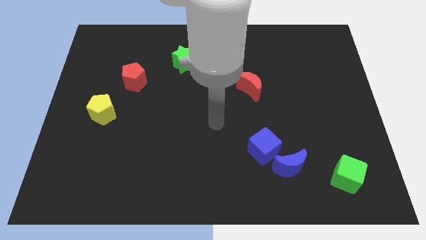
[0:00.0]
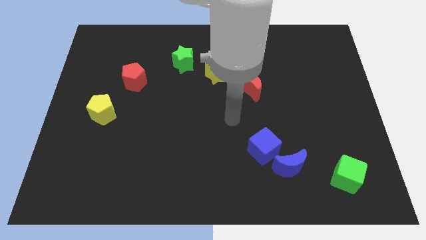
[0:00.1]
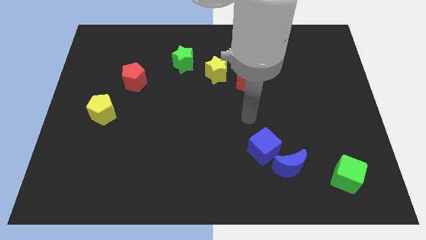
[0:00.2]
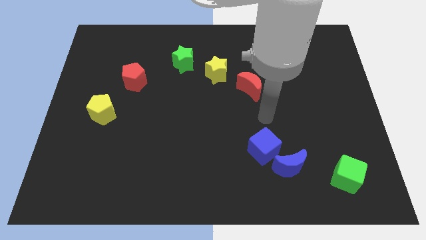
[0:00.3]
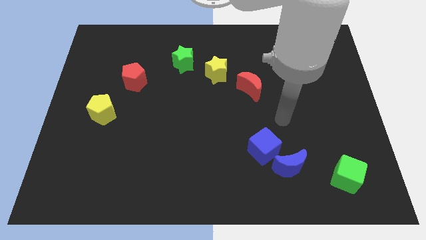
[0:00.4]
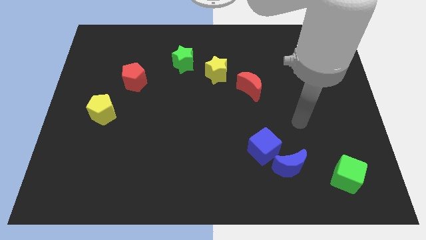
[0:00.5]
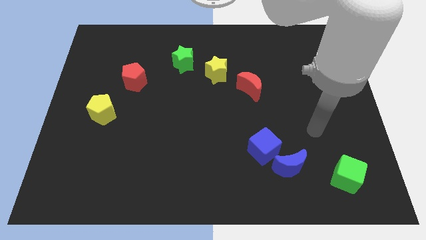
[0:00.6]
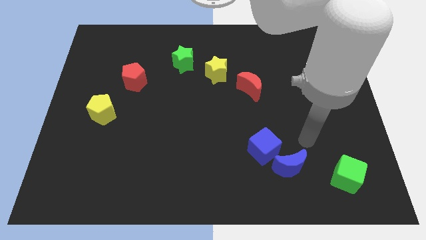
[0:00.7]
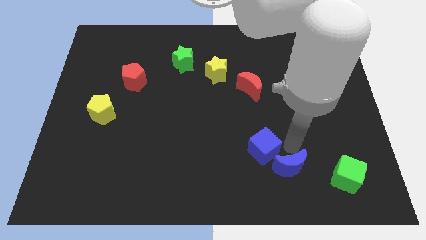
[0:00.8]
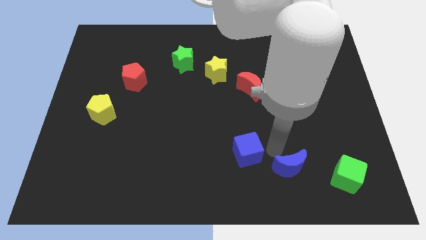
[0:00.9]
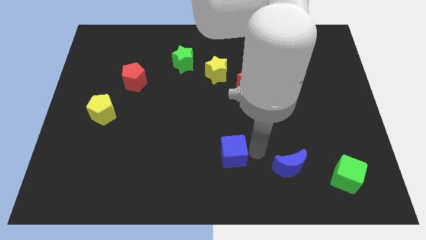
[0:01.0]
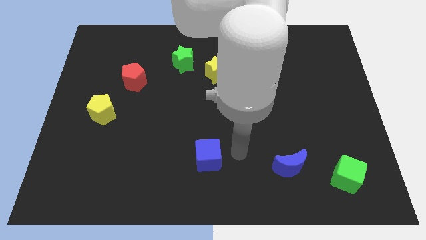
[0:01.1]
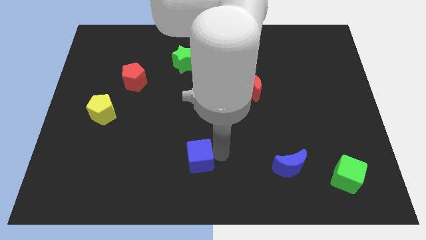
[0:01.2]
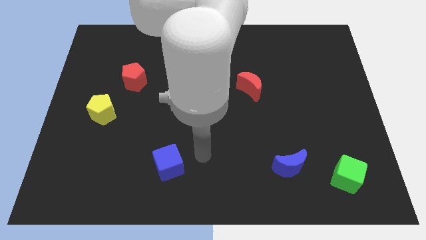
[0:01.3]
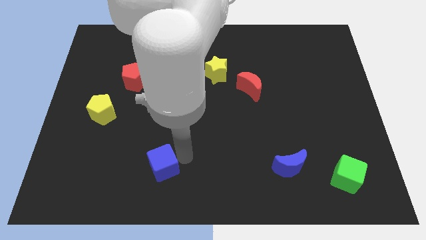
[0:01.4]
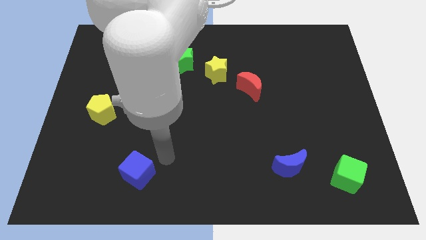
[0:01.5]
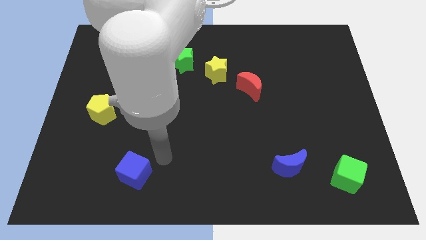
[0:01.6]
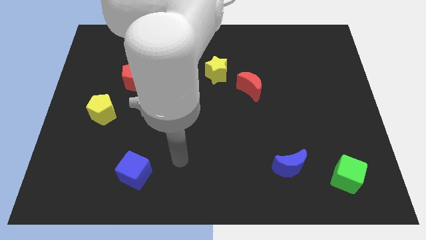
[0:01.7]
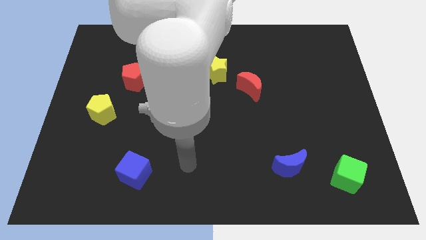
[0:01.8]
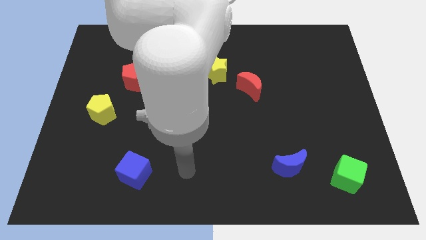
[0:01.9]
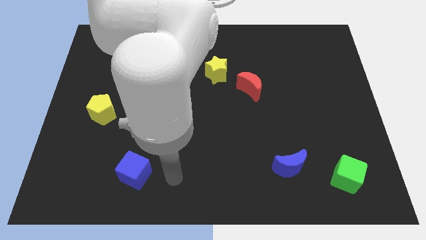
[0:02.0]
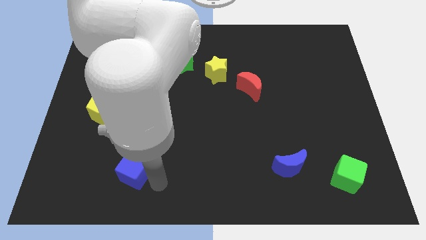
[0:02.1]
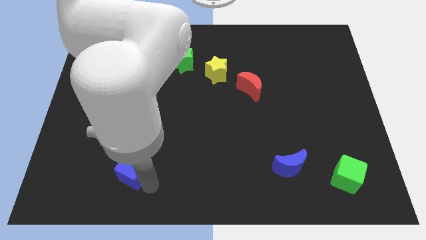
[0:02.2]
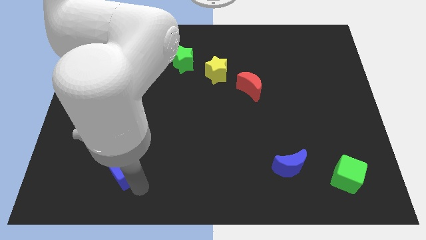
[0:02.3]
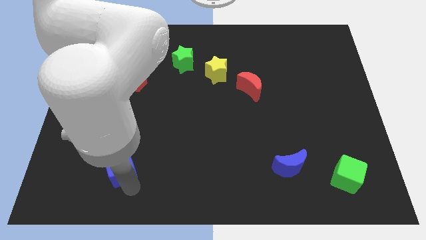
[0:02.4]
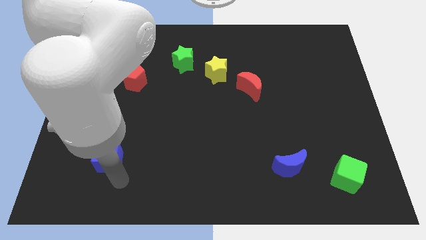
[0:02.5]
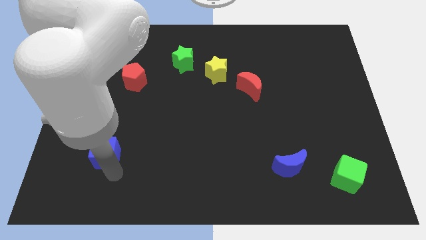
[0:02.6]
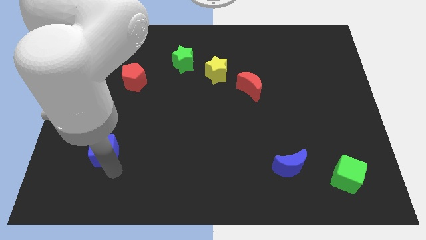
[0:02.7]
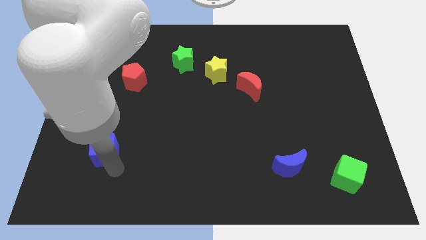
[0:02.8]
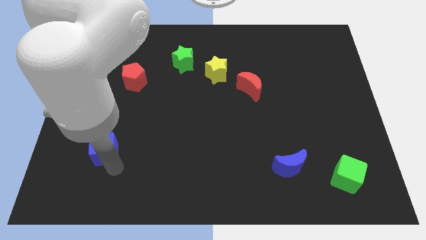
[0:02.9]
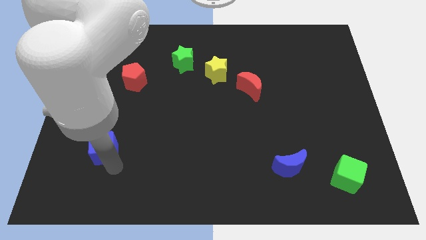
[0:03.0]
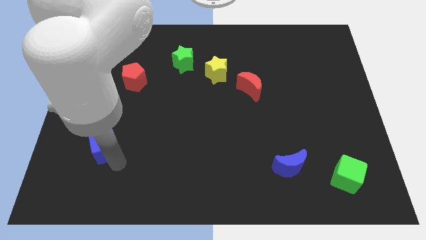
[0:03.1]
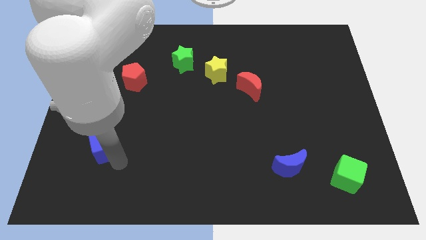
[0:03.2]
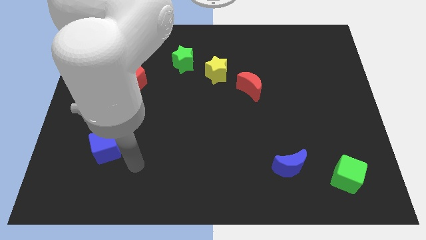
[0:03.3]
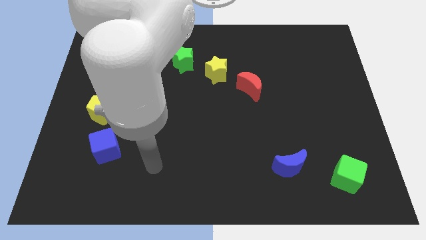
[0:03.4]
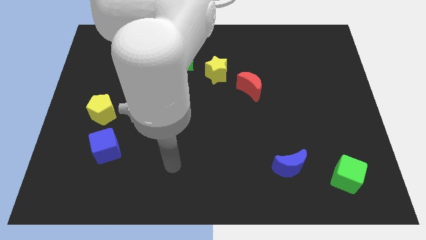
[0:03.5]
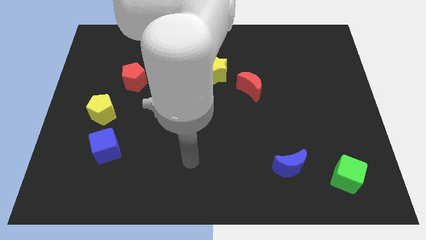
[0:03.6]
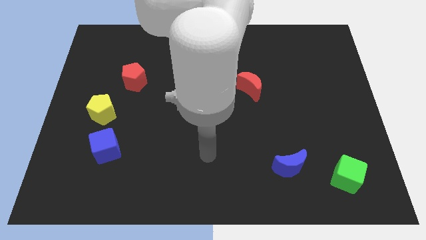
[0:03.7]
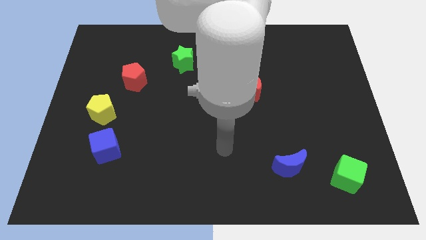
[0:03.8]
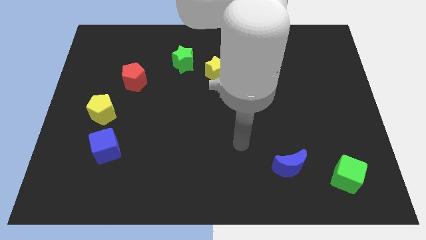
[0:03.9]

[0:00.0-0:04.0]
separate blue cube from blue moon

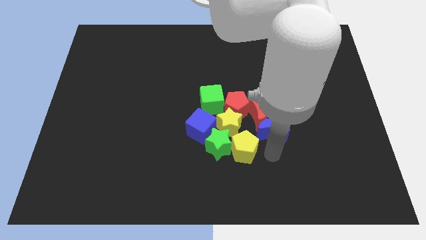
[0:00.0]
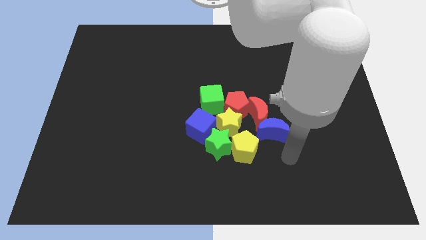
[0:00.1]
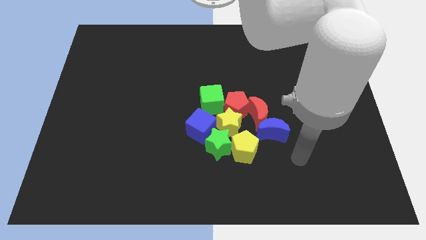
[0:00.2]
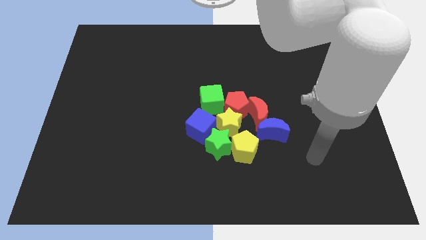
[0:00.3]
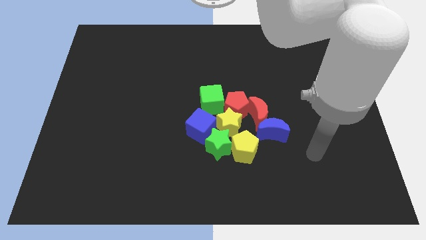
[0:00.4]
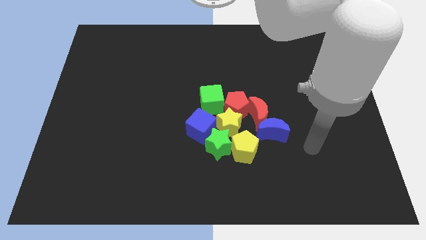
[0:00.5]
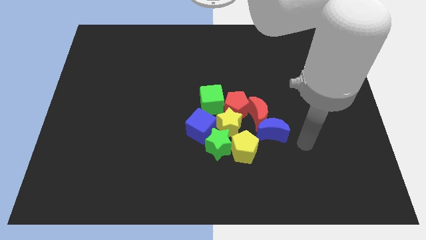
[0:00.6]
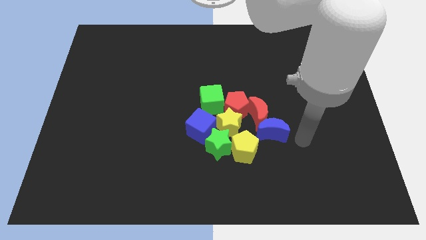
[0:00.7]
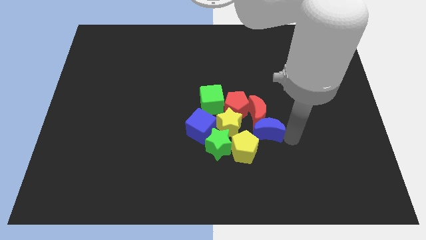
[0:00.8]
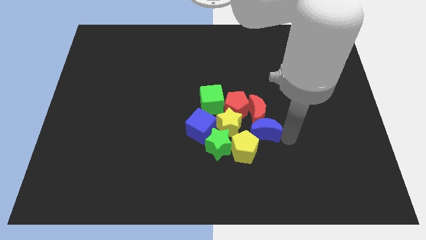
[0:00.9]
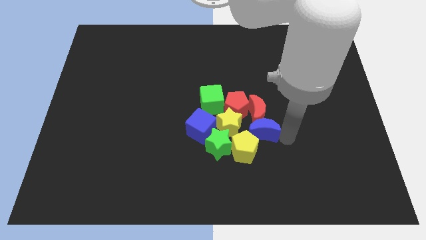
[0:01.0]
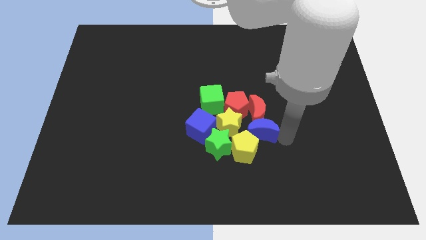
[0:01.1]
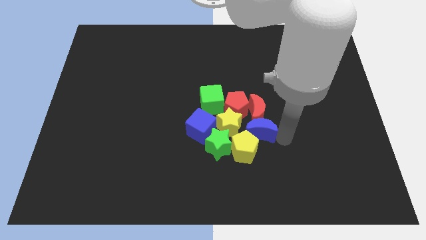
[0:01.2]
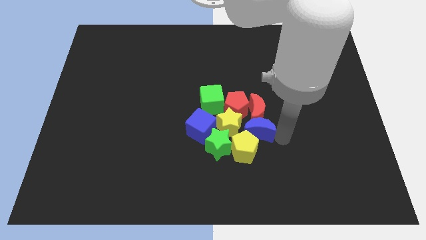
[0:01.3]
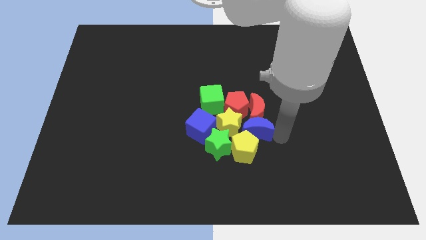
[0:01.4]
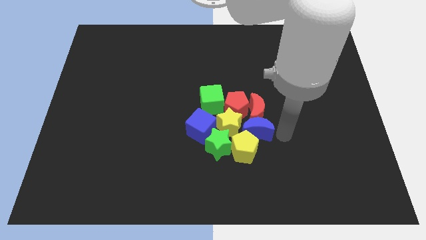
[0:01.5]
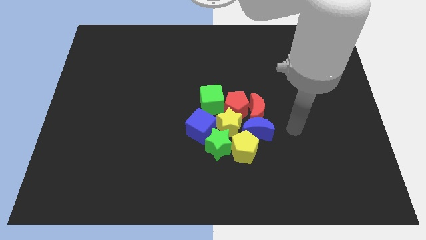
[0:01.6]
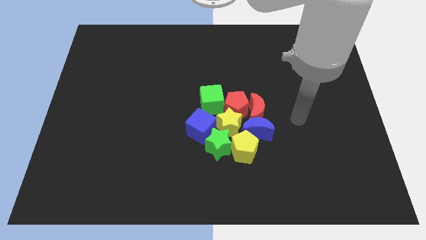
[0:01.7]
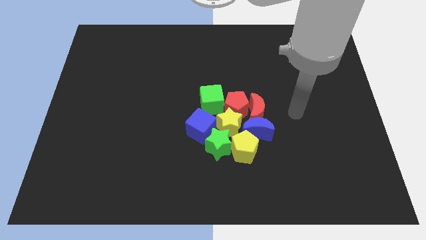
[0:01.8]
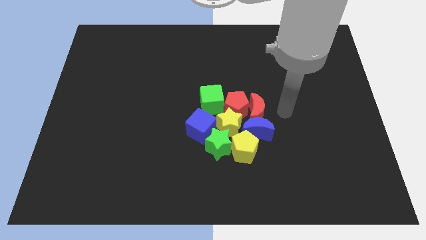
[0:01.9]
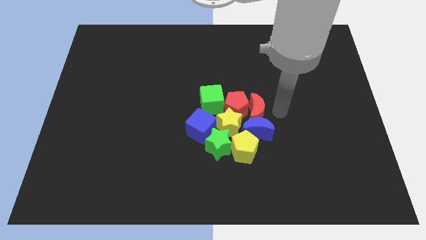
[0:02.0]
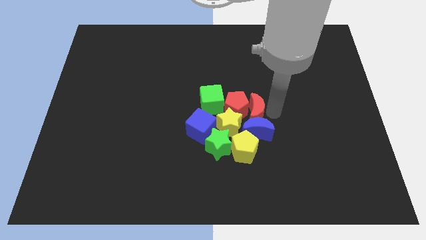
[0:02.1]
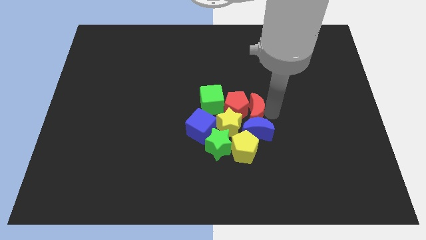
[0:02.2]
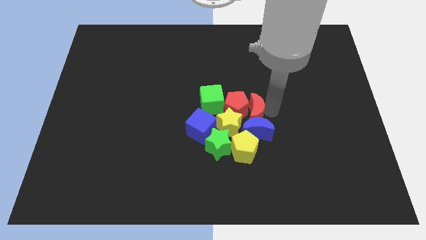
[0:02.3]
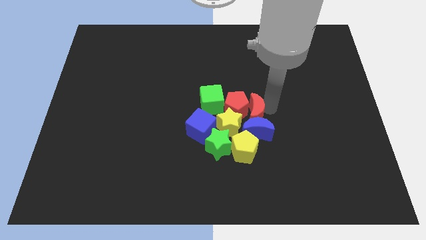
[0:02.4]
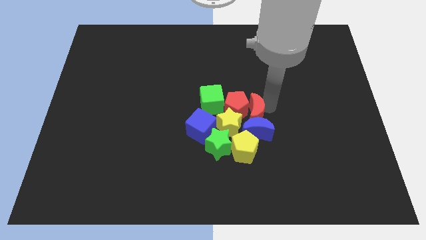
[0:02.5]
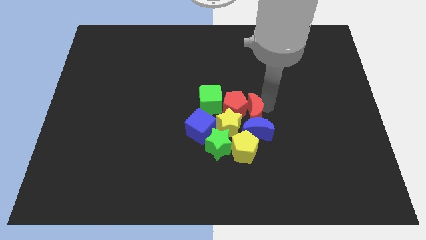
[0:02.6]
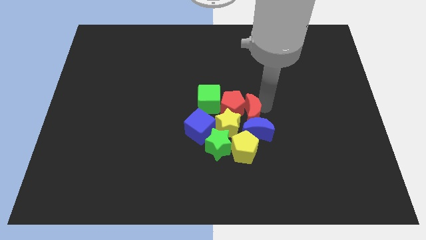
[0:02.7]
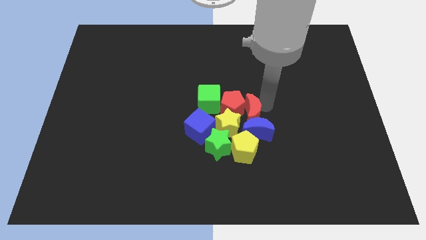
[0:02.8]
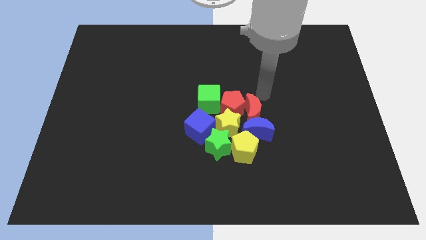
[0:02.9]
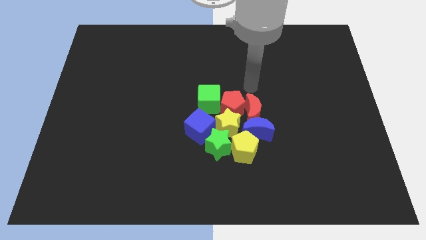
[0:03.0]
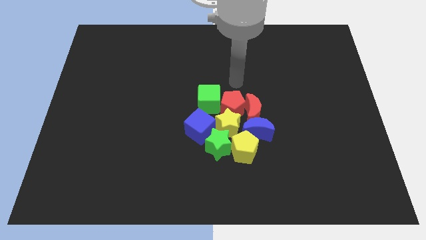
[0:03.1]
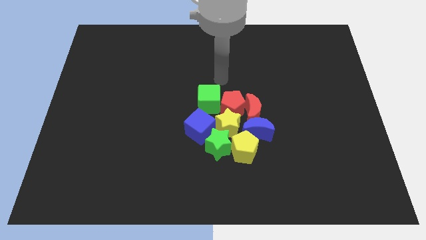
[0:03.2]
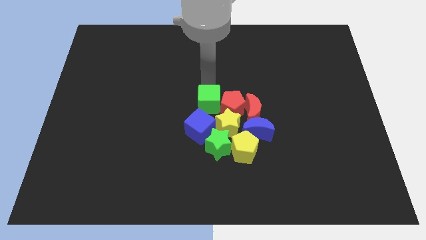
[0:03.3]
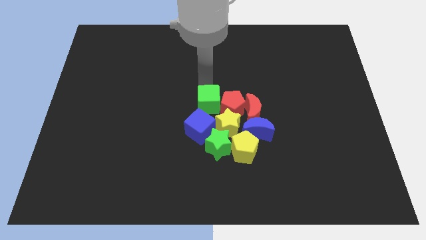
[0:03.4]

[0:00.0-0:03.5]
slide blue moon vertically below the red moon

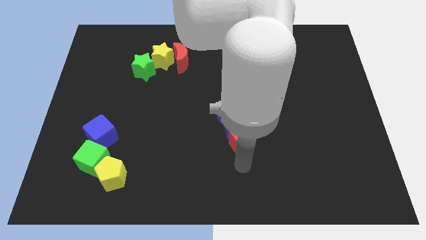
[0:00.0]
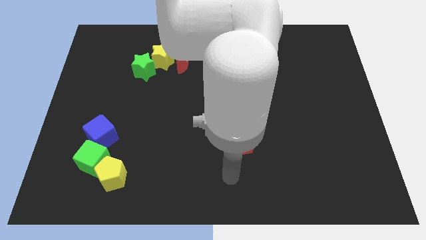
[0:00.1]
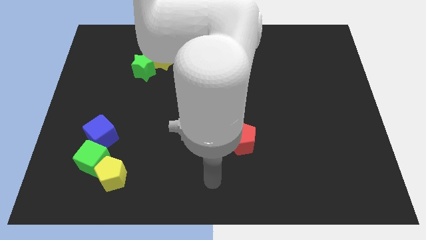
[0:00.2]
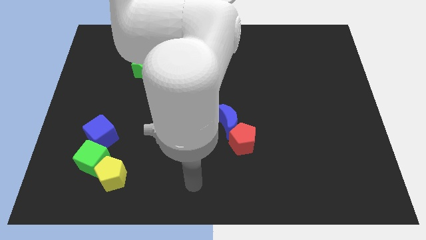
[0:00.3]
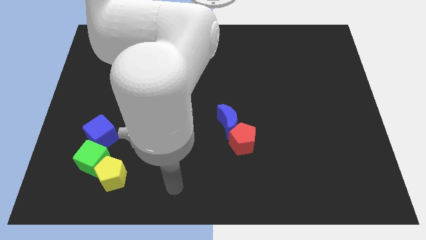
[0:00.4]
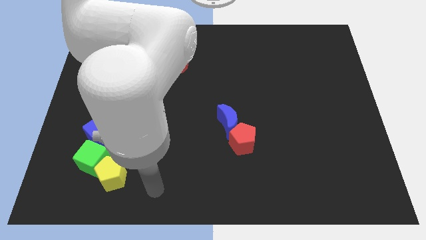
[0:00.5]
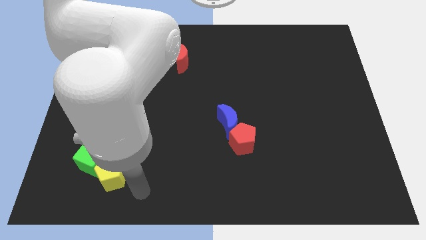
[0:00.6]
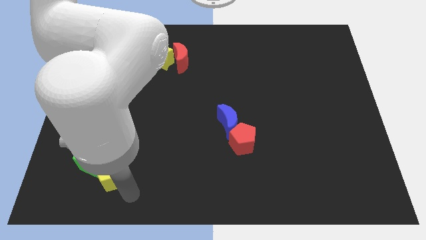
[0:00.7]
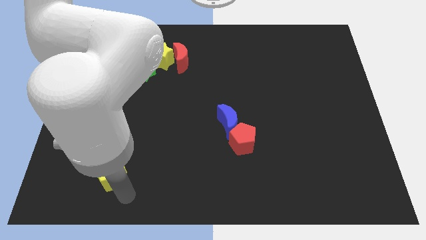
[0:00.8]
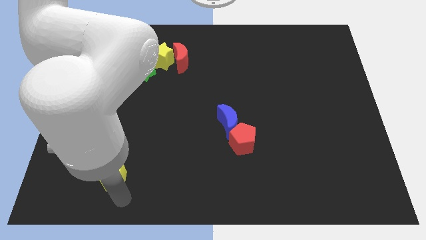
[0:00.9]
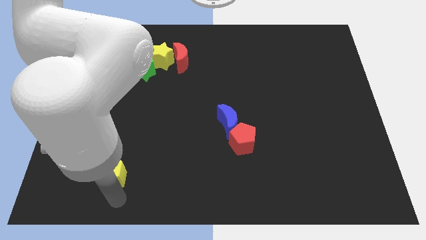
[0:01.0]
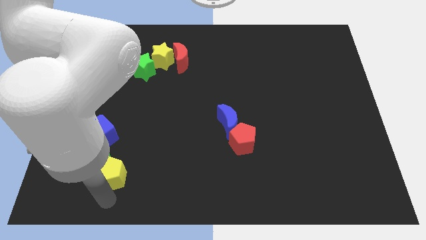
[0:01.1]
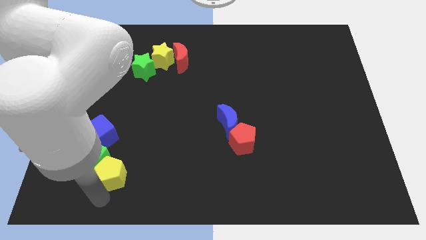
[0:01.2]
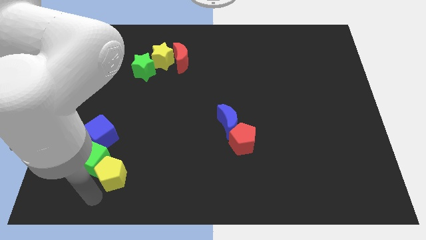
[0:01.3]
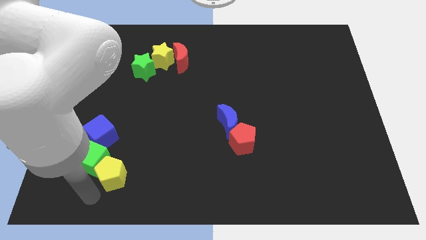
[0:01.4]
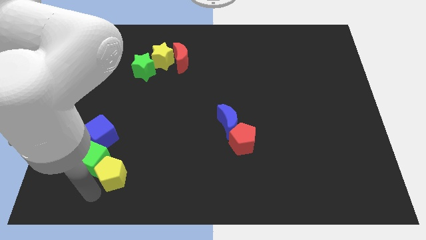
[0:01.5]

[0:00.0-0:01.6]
move your arm towards the yellow pentagon
